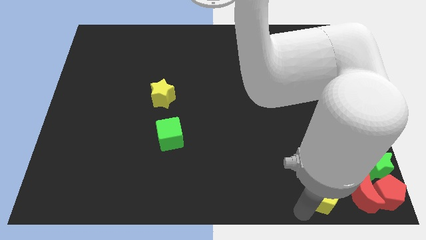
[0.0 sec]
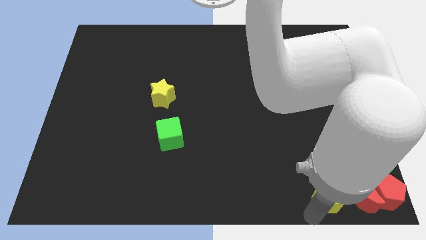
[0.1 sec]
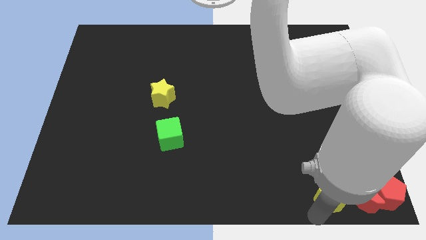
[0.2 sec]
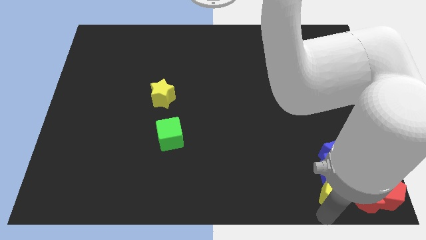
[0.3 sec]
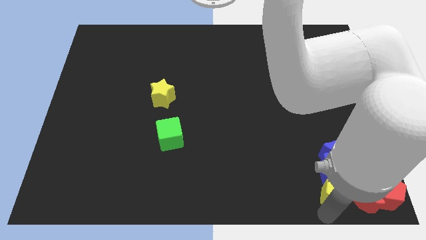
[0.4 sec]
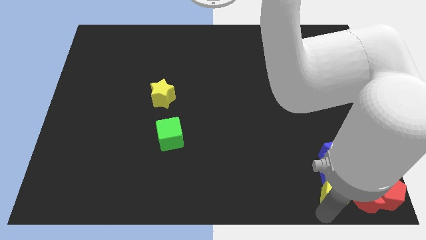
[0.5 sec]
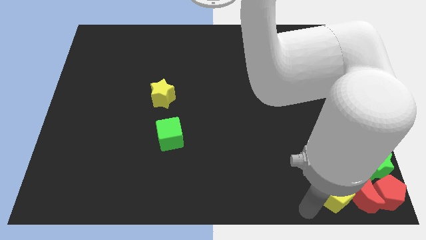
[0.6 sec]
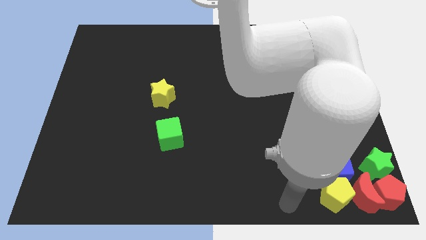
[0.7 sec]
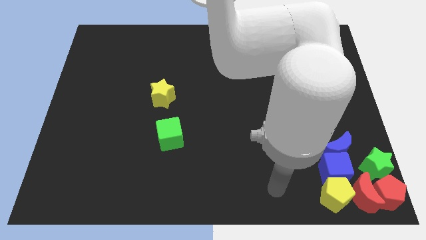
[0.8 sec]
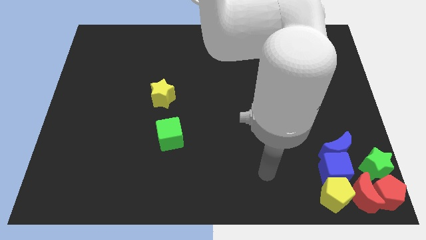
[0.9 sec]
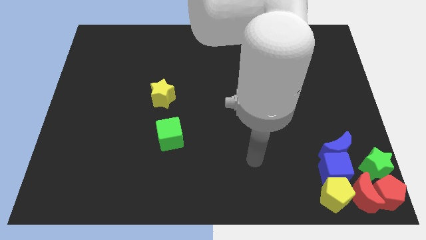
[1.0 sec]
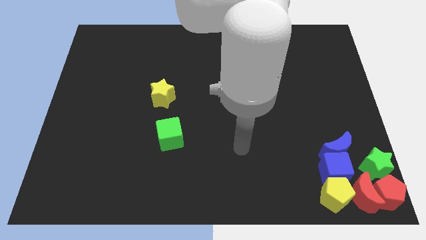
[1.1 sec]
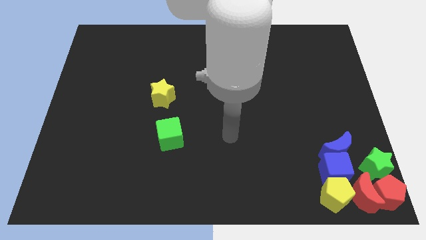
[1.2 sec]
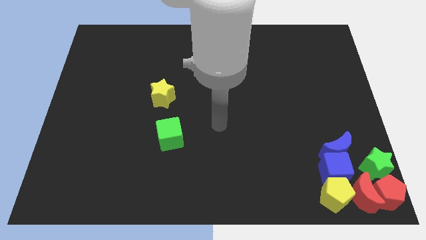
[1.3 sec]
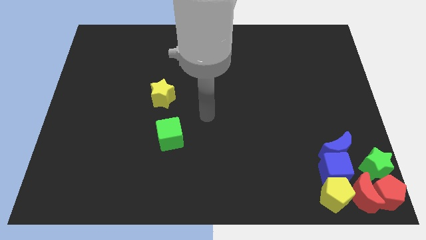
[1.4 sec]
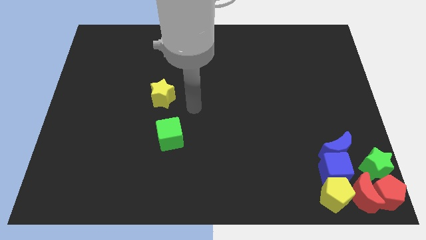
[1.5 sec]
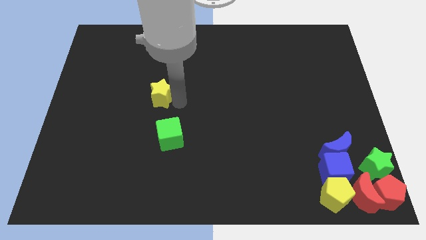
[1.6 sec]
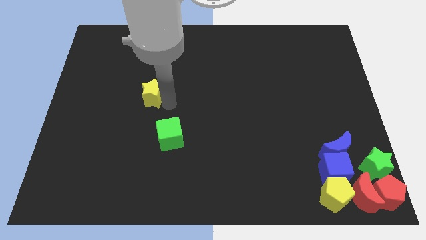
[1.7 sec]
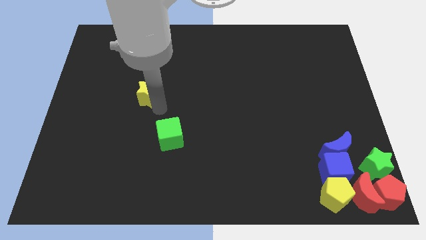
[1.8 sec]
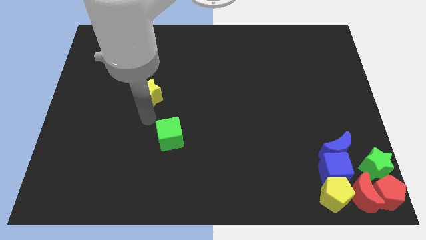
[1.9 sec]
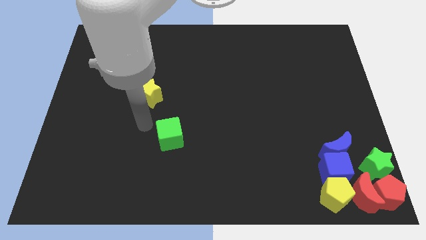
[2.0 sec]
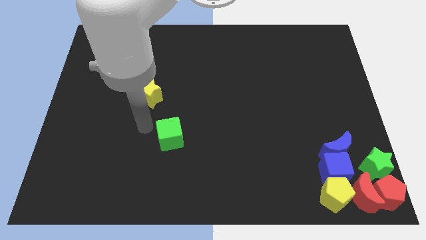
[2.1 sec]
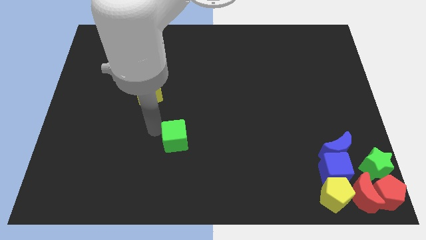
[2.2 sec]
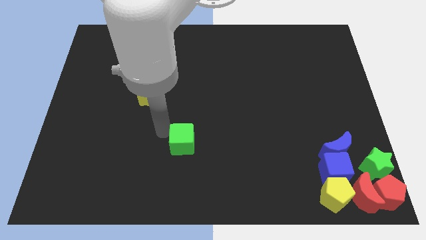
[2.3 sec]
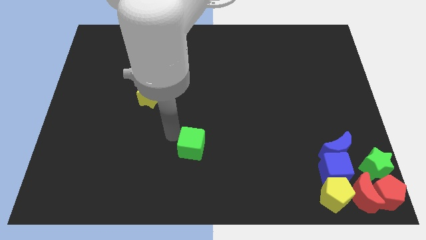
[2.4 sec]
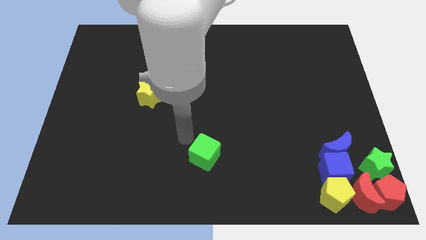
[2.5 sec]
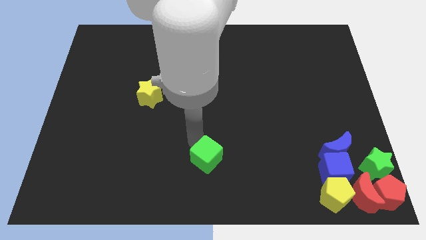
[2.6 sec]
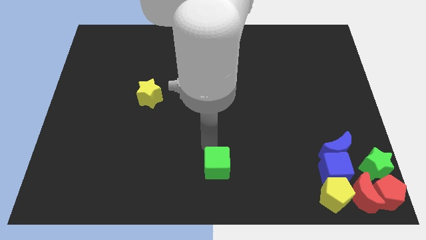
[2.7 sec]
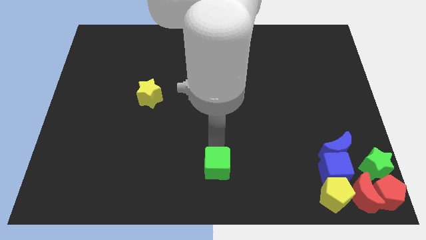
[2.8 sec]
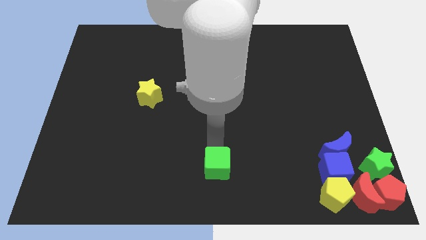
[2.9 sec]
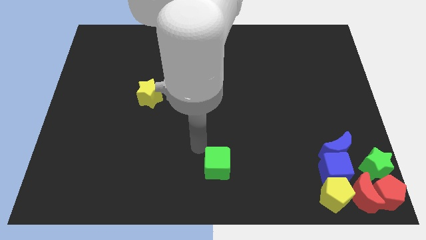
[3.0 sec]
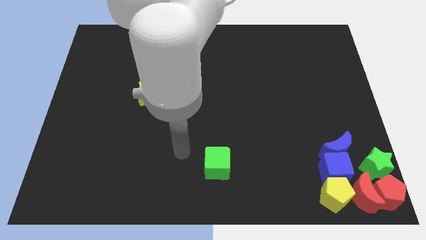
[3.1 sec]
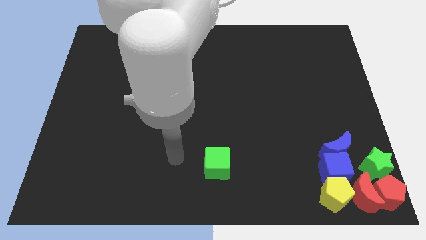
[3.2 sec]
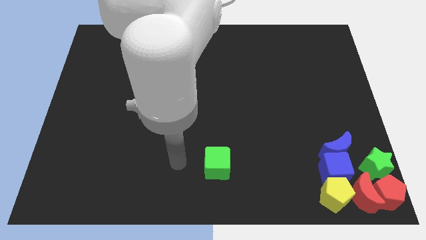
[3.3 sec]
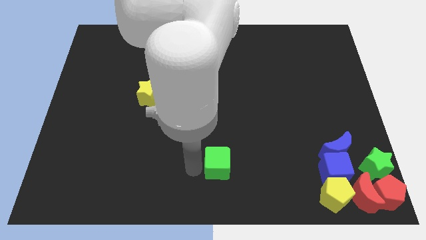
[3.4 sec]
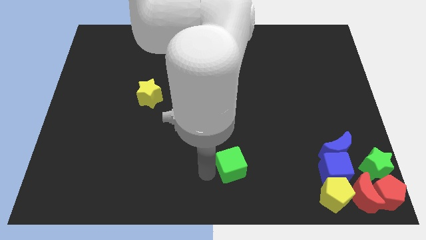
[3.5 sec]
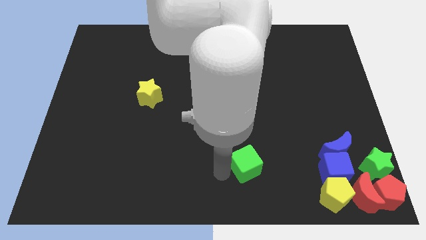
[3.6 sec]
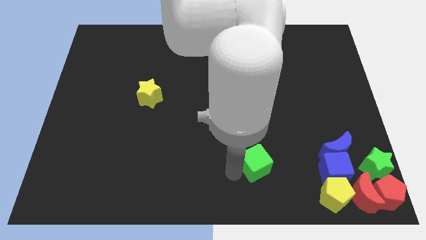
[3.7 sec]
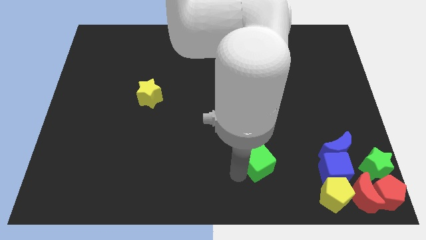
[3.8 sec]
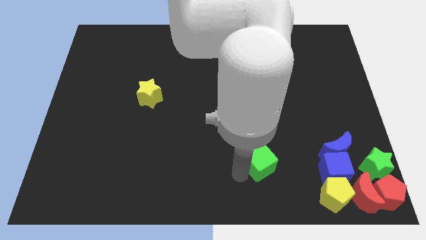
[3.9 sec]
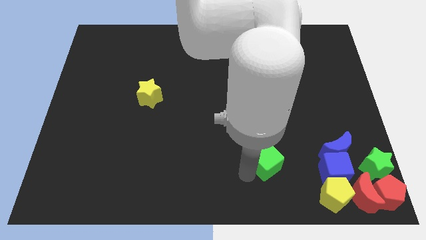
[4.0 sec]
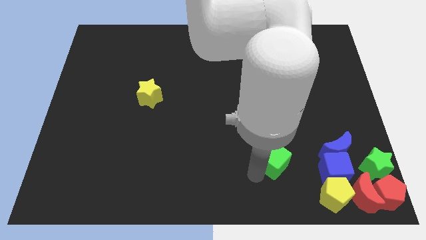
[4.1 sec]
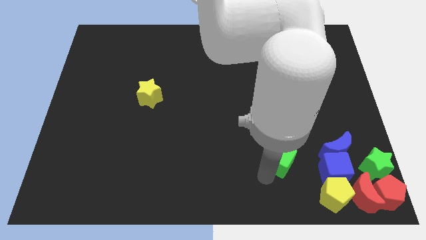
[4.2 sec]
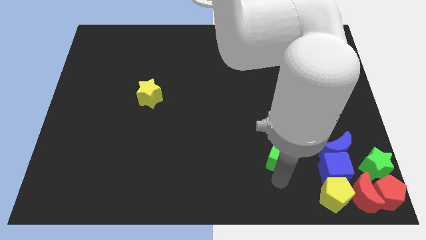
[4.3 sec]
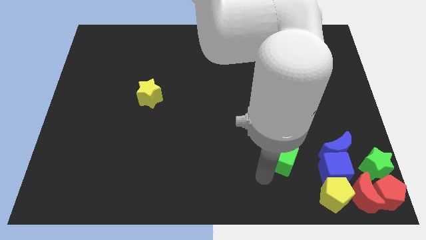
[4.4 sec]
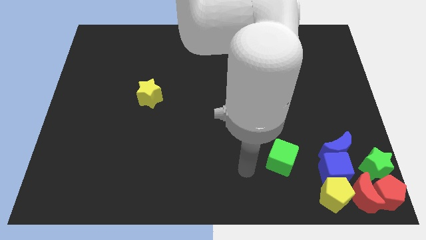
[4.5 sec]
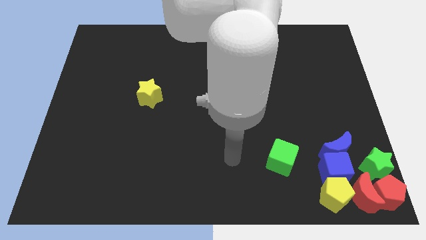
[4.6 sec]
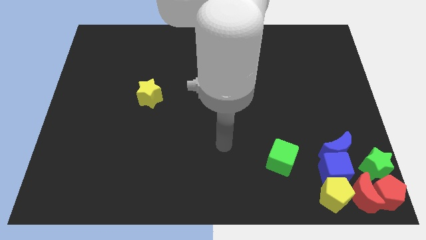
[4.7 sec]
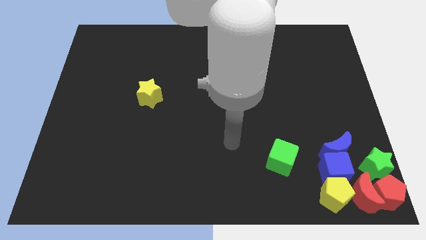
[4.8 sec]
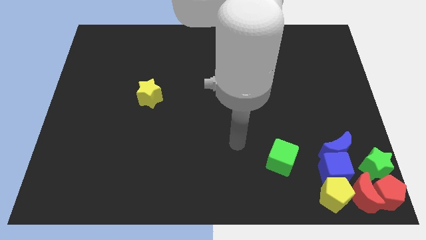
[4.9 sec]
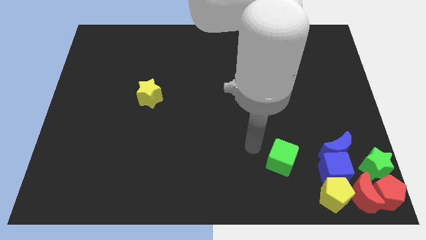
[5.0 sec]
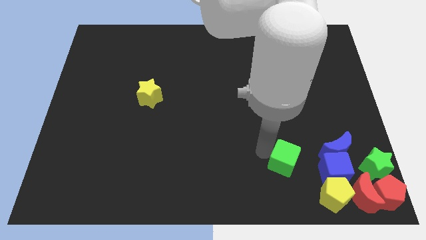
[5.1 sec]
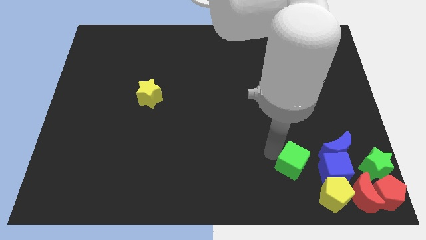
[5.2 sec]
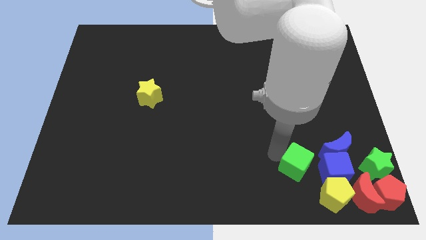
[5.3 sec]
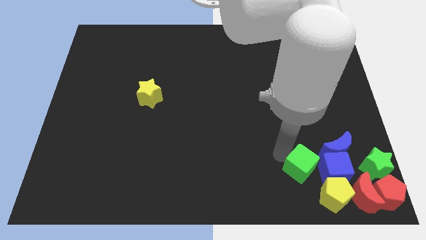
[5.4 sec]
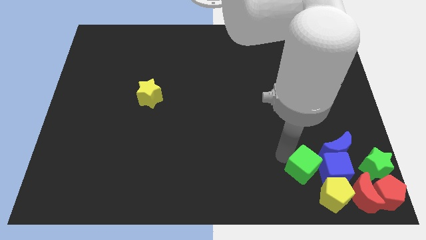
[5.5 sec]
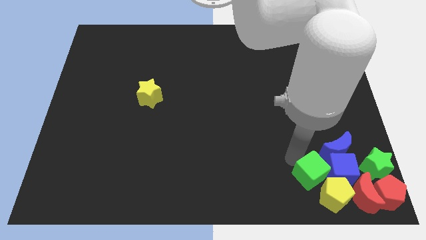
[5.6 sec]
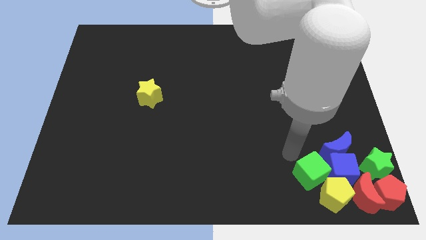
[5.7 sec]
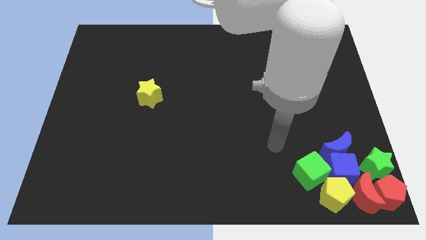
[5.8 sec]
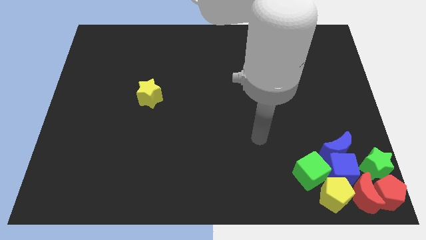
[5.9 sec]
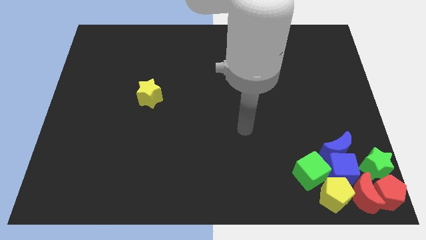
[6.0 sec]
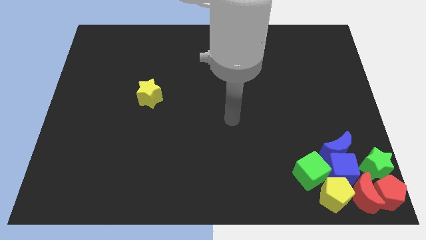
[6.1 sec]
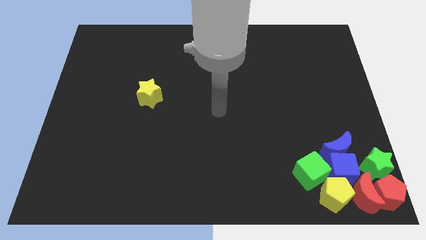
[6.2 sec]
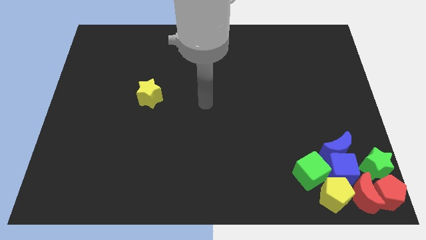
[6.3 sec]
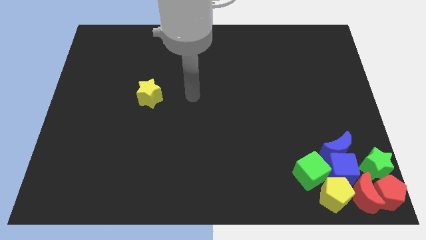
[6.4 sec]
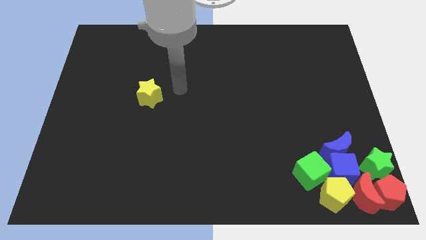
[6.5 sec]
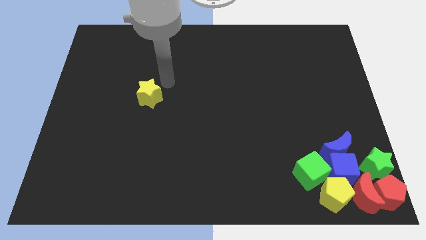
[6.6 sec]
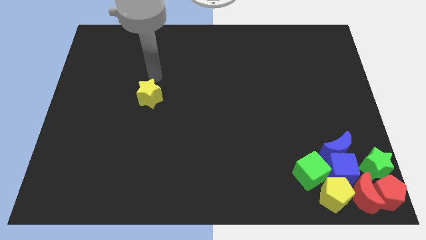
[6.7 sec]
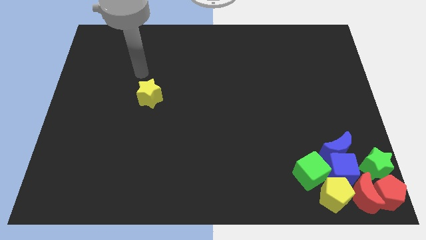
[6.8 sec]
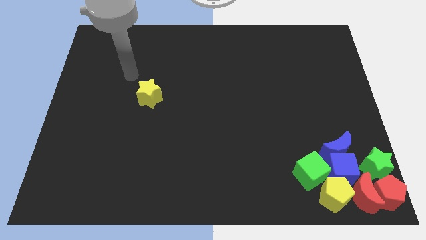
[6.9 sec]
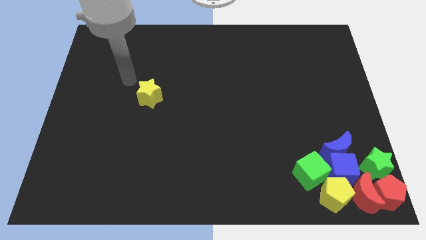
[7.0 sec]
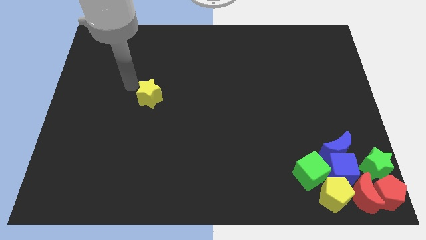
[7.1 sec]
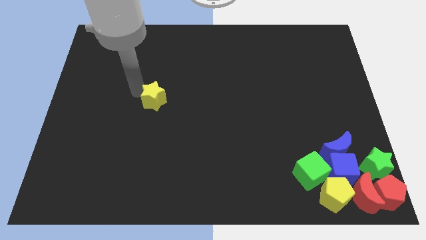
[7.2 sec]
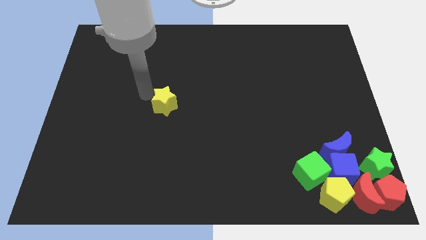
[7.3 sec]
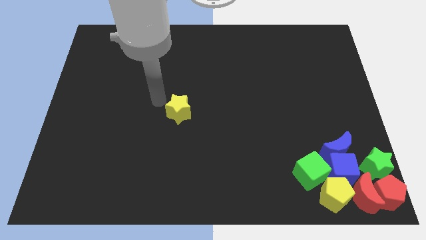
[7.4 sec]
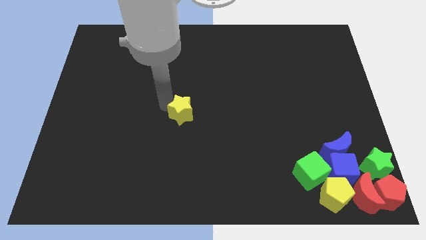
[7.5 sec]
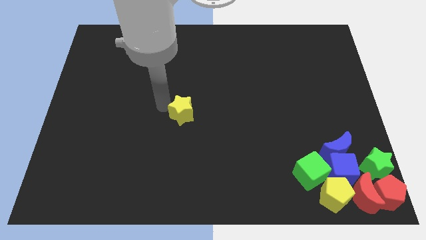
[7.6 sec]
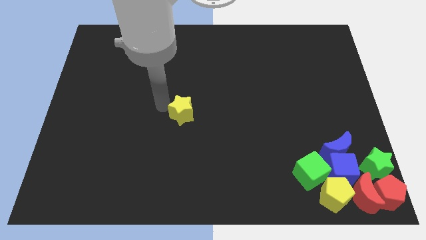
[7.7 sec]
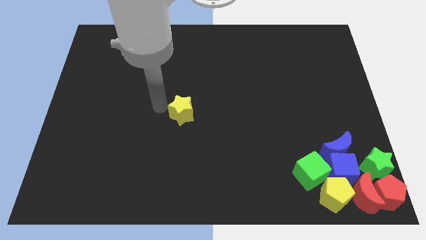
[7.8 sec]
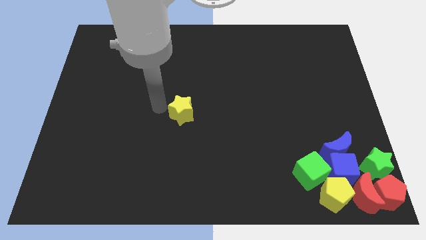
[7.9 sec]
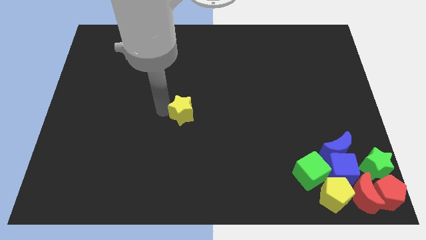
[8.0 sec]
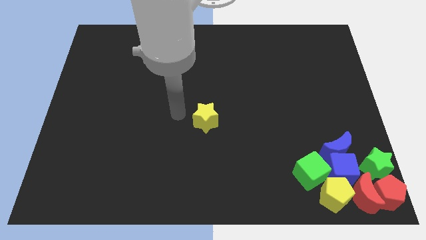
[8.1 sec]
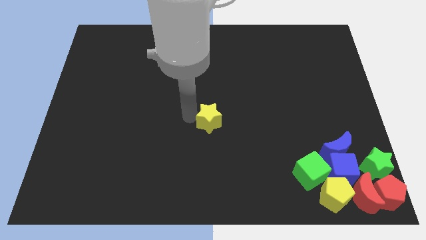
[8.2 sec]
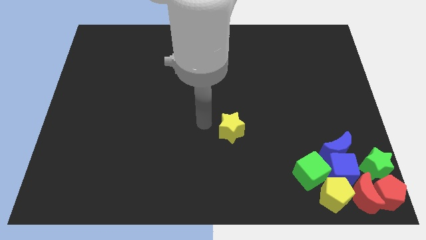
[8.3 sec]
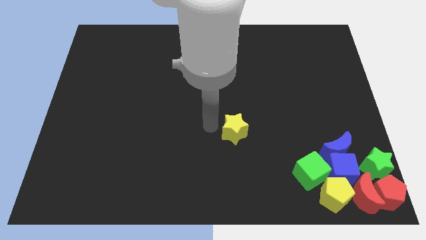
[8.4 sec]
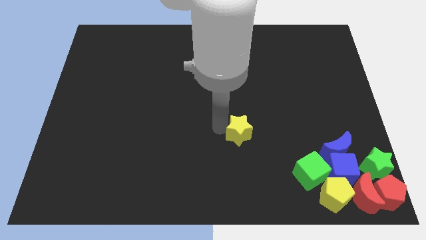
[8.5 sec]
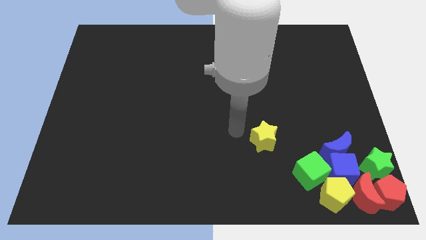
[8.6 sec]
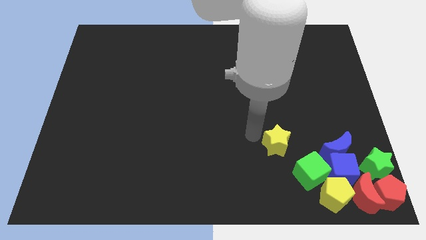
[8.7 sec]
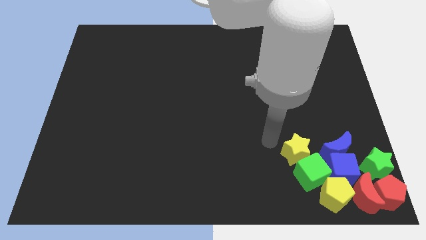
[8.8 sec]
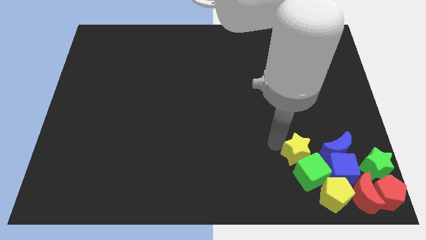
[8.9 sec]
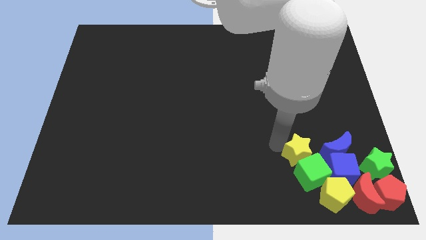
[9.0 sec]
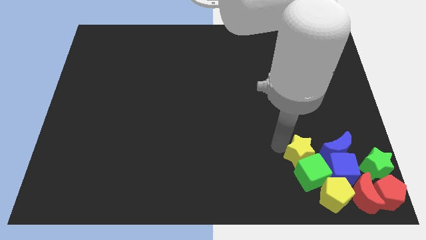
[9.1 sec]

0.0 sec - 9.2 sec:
group up all the blocks at the bottom right of the table
